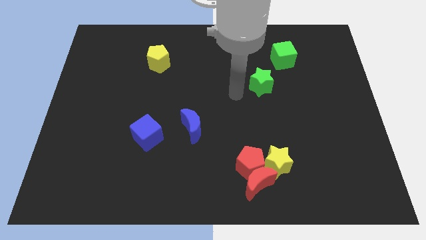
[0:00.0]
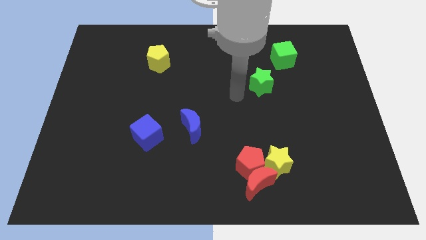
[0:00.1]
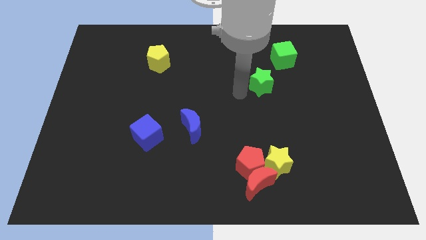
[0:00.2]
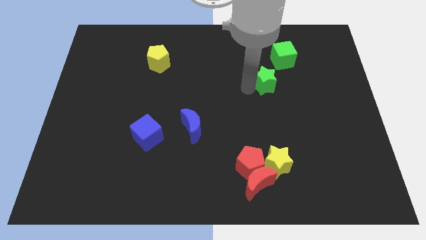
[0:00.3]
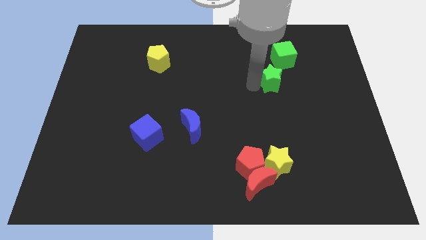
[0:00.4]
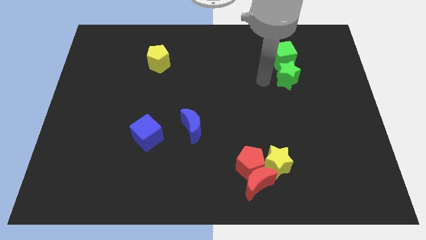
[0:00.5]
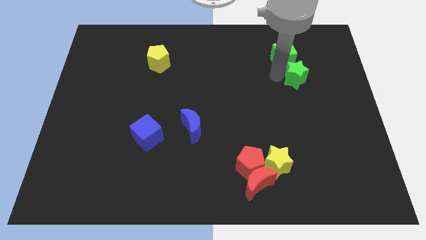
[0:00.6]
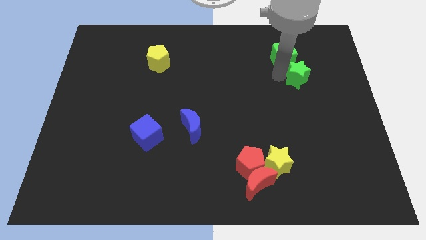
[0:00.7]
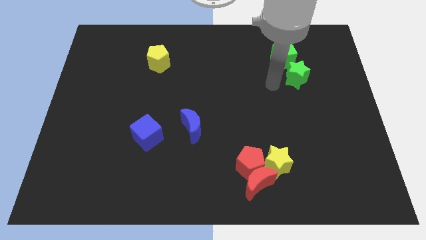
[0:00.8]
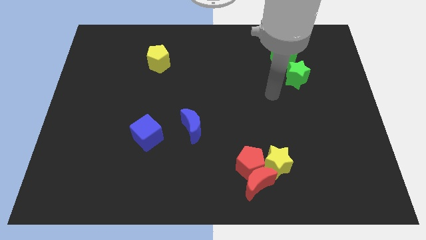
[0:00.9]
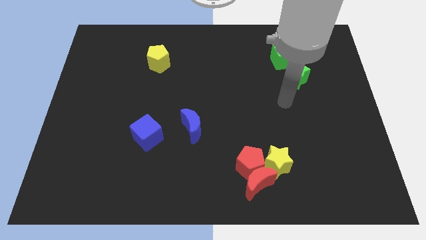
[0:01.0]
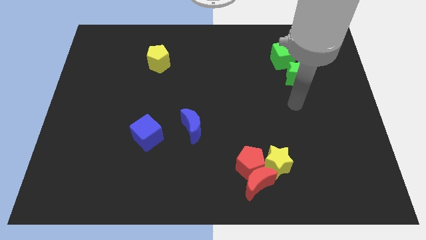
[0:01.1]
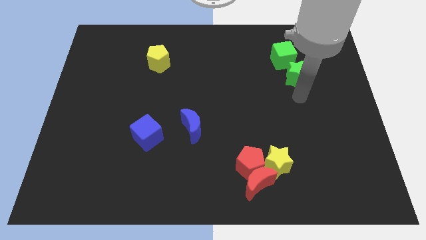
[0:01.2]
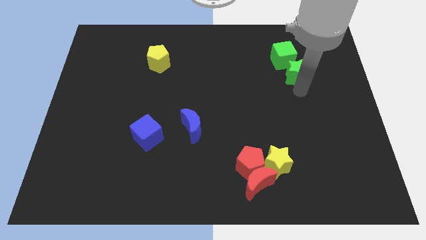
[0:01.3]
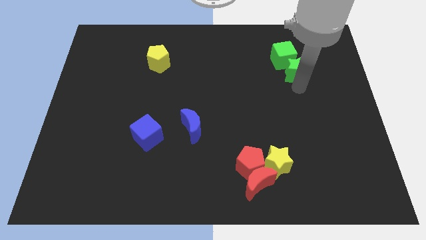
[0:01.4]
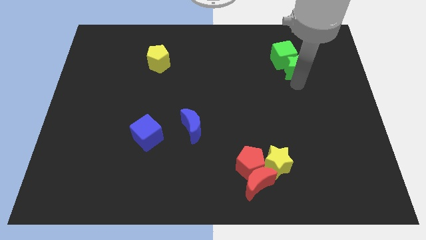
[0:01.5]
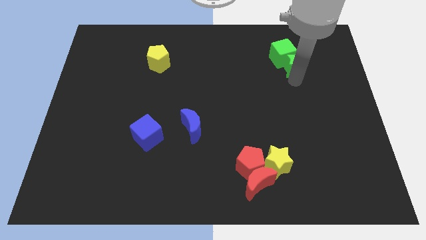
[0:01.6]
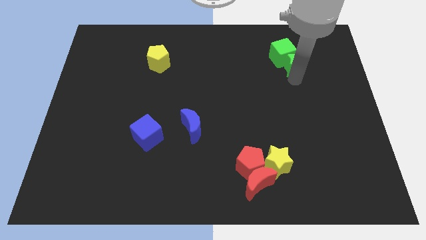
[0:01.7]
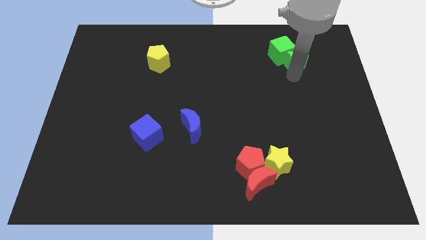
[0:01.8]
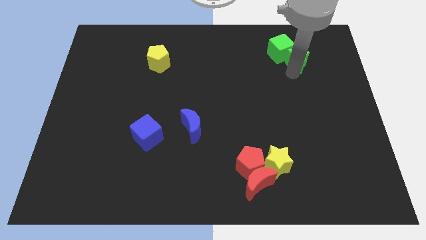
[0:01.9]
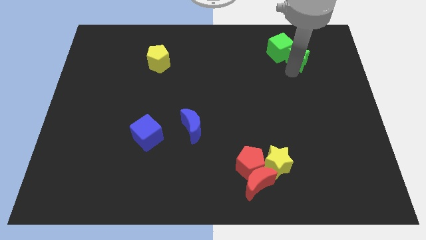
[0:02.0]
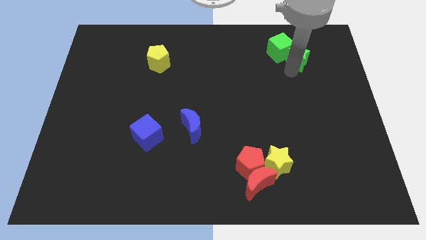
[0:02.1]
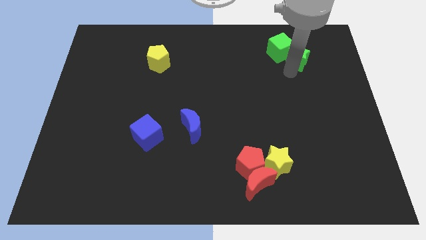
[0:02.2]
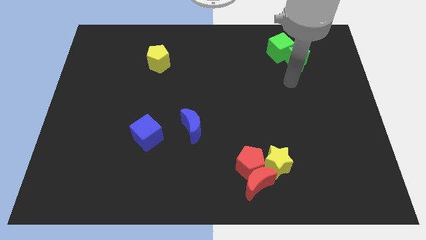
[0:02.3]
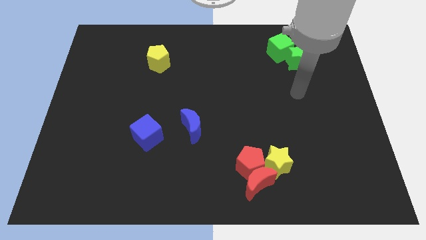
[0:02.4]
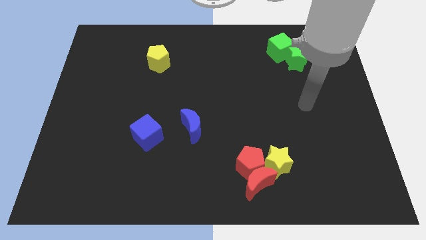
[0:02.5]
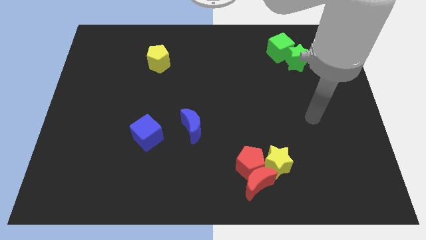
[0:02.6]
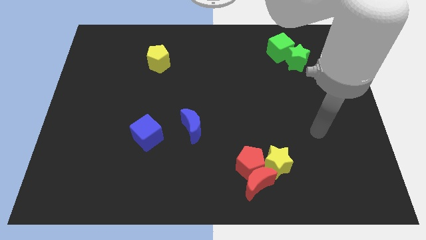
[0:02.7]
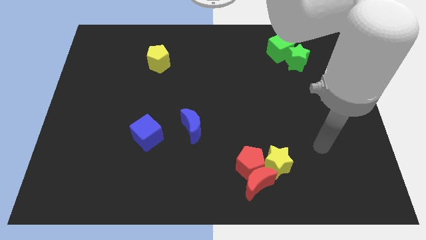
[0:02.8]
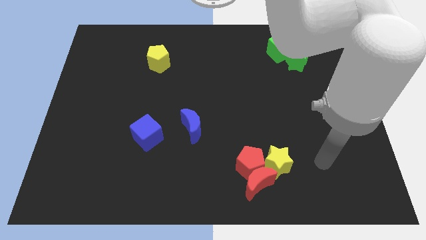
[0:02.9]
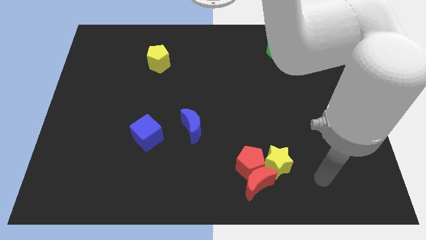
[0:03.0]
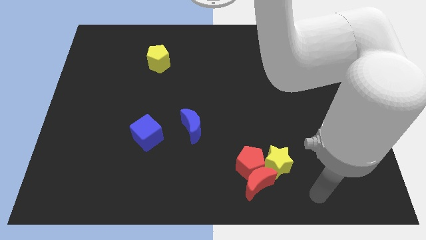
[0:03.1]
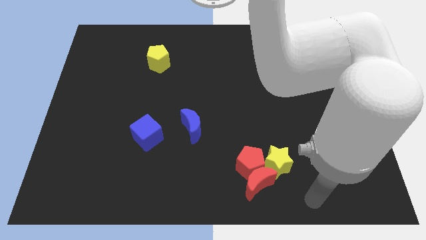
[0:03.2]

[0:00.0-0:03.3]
move the green star below the green cube

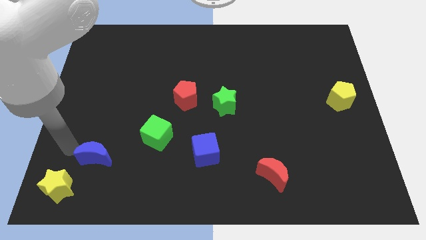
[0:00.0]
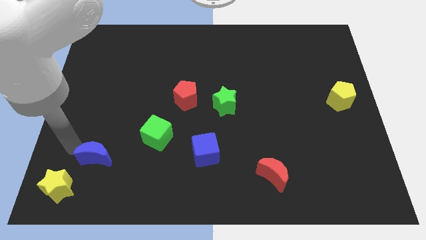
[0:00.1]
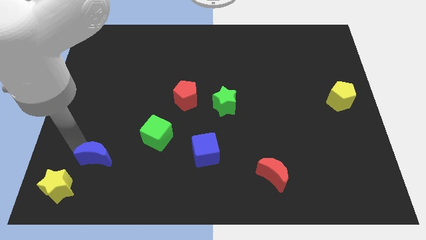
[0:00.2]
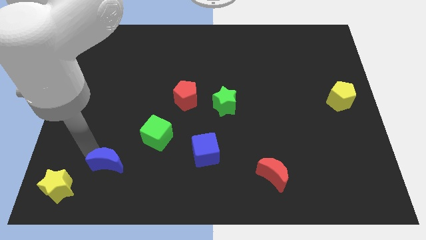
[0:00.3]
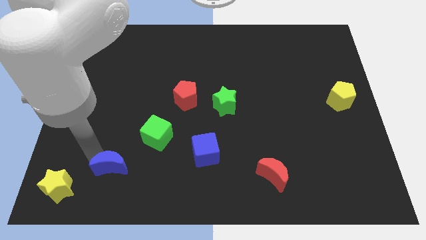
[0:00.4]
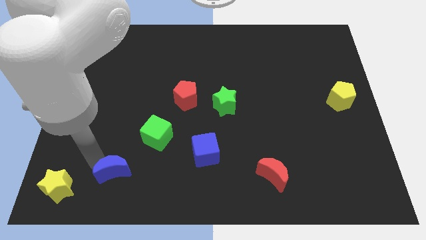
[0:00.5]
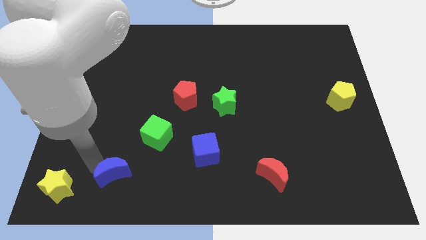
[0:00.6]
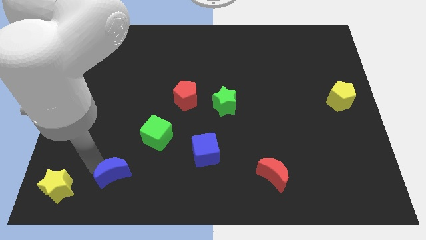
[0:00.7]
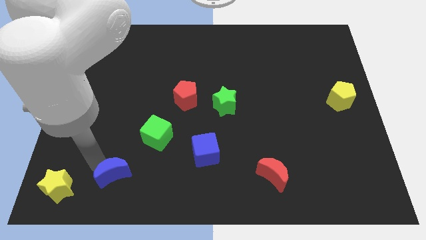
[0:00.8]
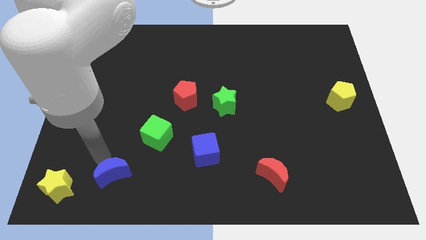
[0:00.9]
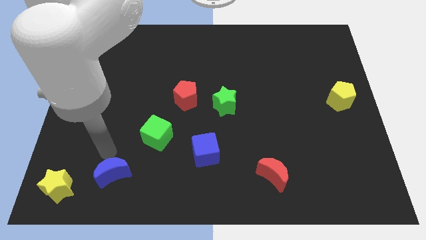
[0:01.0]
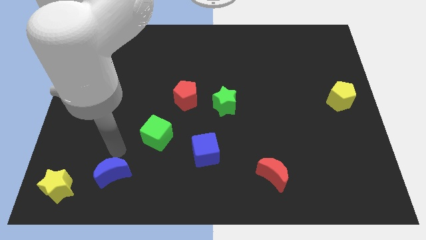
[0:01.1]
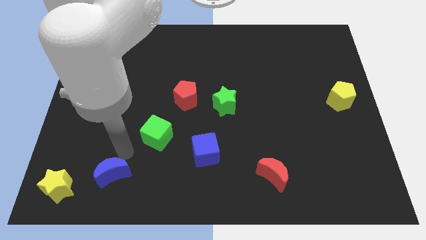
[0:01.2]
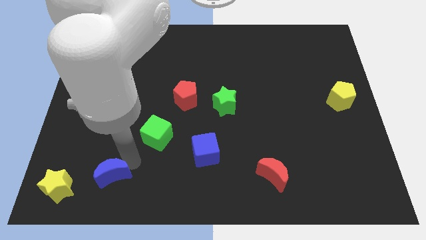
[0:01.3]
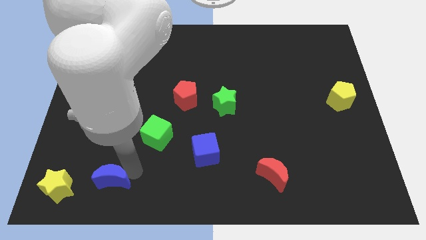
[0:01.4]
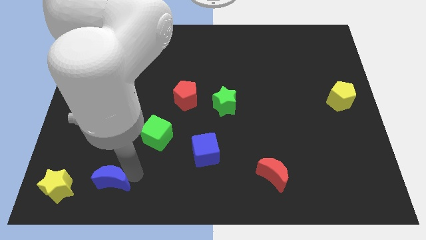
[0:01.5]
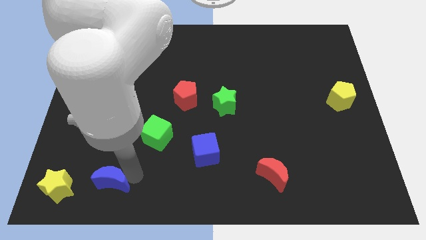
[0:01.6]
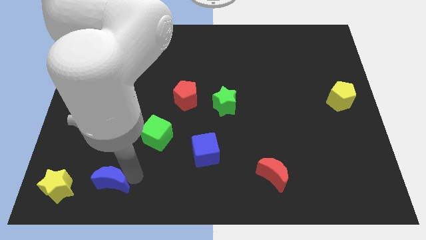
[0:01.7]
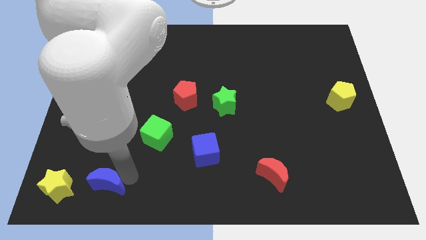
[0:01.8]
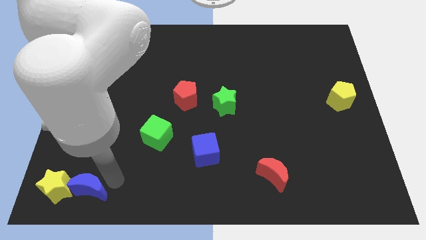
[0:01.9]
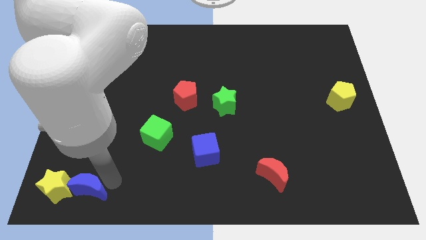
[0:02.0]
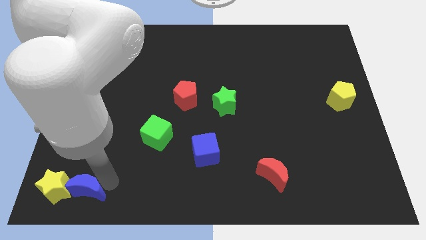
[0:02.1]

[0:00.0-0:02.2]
push the blue moon to the right of yellow star

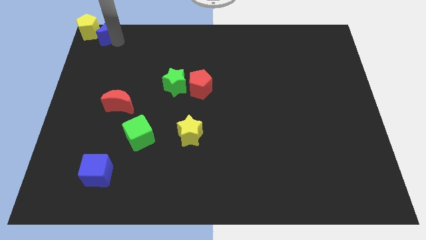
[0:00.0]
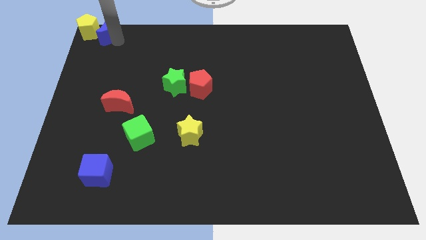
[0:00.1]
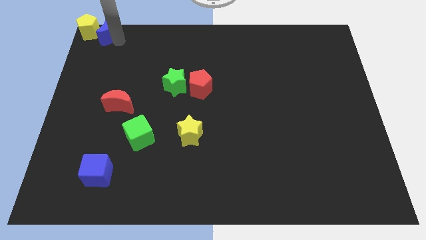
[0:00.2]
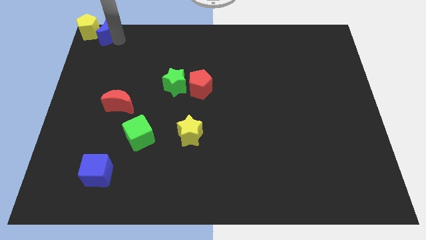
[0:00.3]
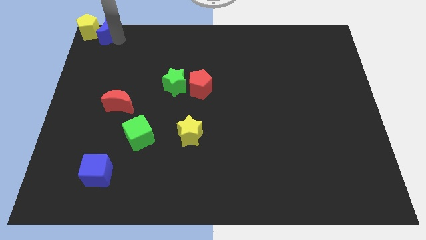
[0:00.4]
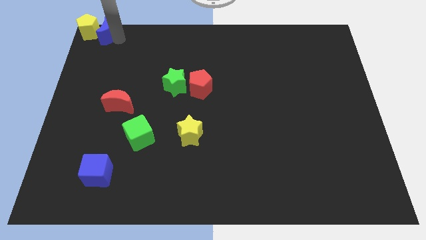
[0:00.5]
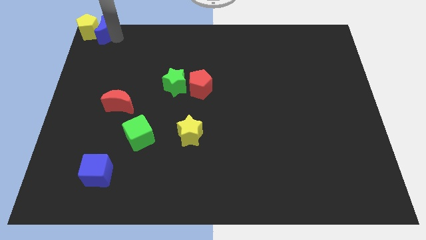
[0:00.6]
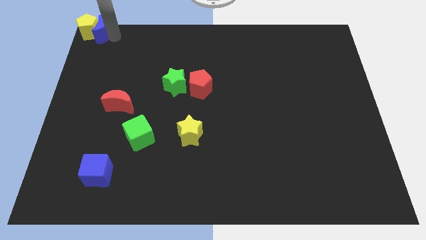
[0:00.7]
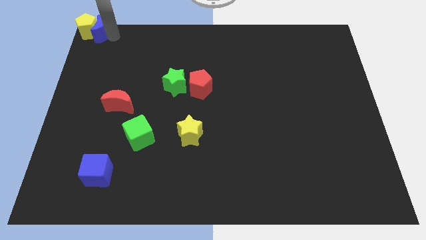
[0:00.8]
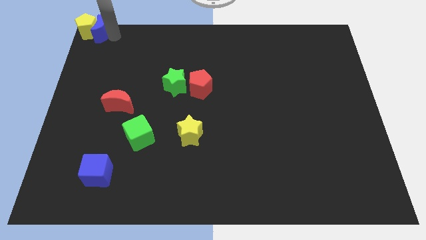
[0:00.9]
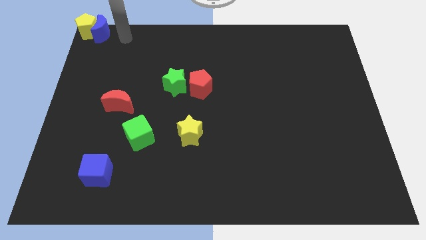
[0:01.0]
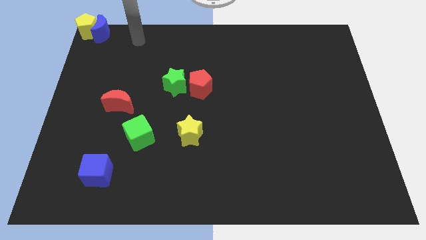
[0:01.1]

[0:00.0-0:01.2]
put the blue crescent to the right side of yellow pentagon

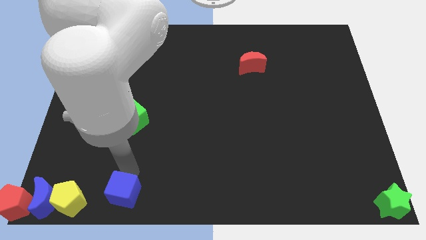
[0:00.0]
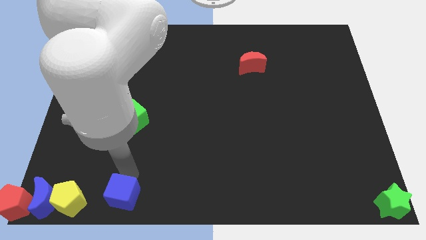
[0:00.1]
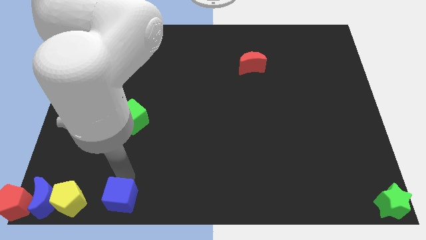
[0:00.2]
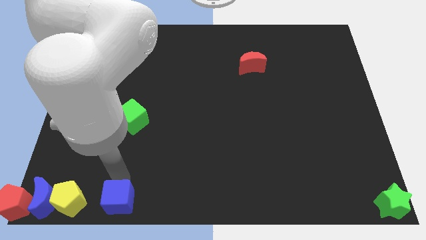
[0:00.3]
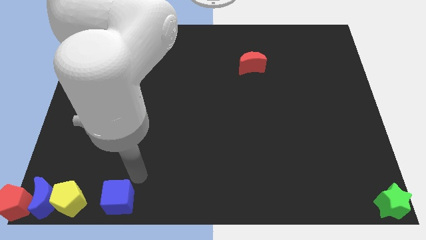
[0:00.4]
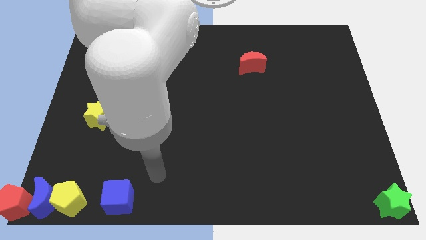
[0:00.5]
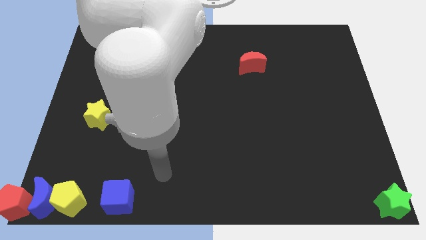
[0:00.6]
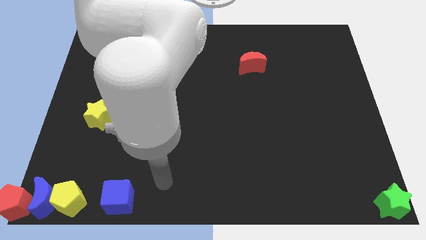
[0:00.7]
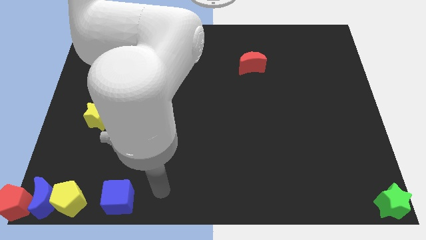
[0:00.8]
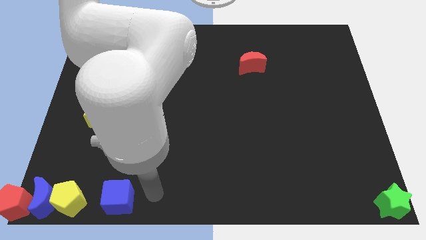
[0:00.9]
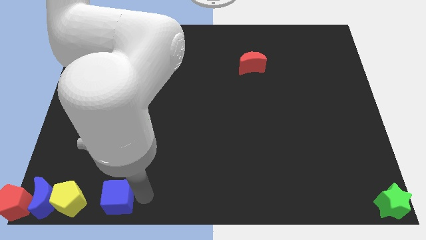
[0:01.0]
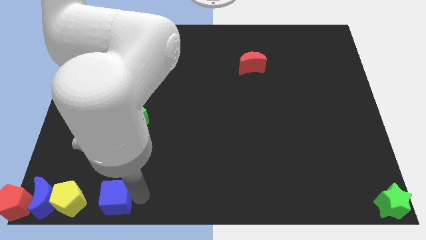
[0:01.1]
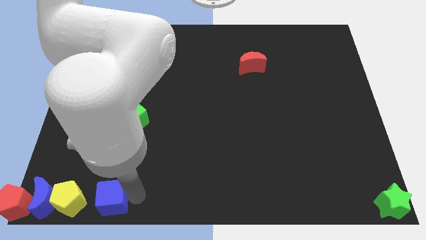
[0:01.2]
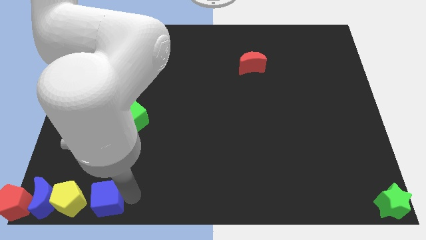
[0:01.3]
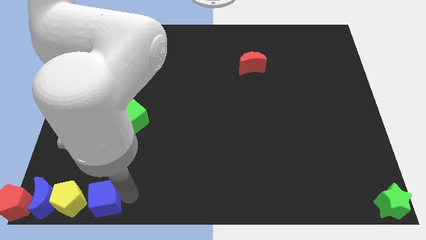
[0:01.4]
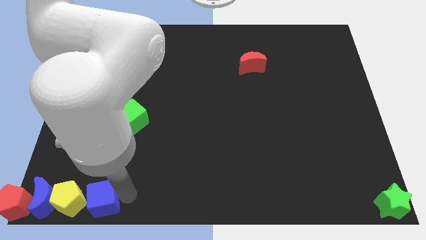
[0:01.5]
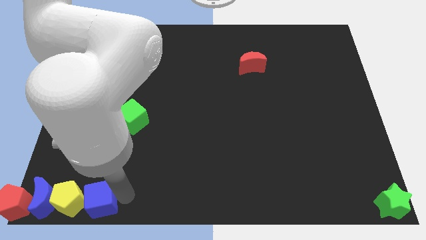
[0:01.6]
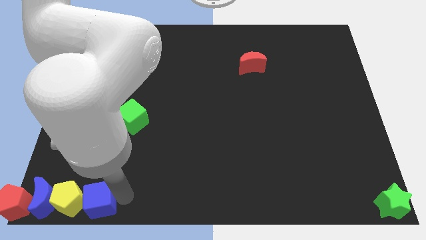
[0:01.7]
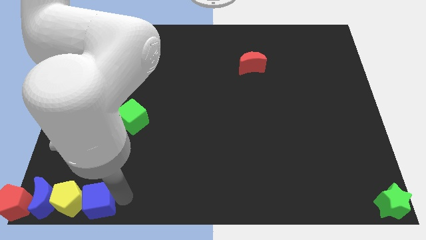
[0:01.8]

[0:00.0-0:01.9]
place blue cube beside yellow pentagon

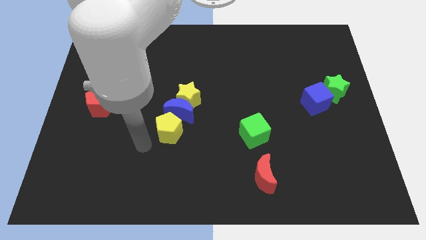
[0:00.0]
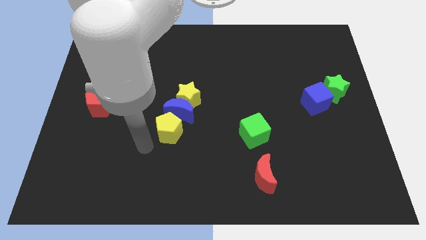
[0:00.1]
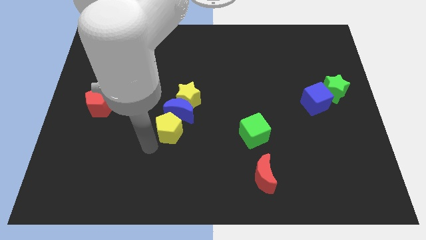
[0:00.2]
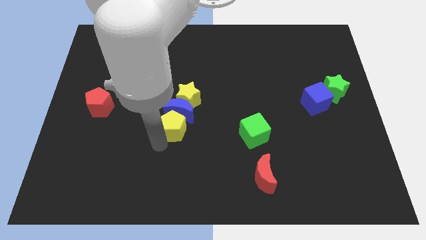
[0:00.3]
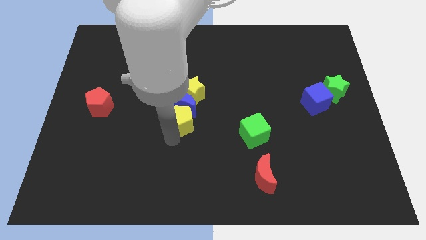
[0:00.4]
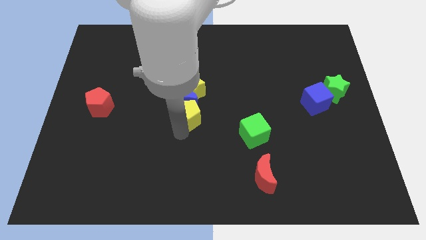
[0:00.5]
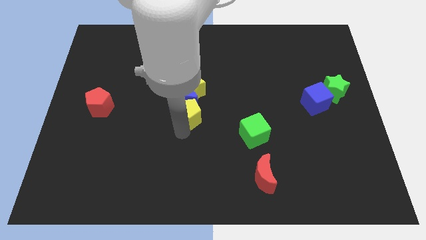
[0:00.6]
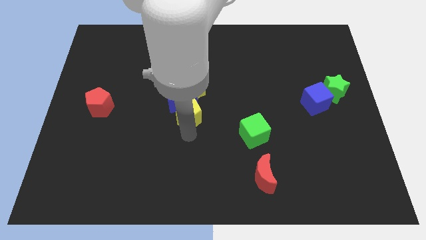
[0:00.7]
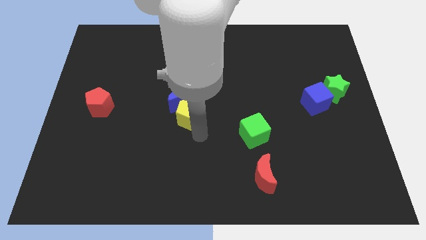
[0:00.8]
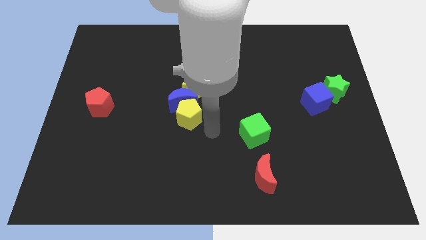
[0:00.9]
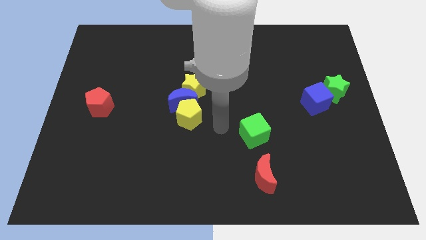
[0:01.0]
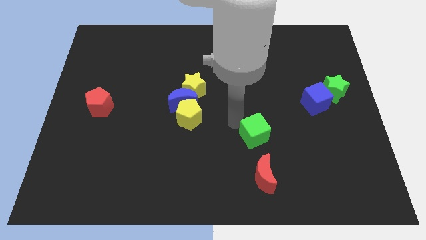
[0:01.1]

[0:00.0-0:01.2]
push the yellow blocks and the blue moon towards the center of the board
